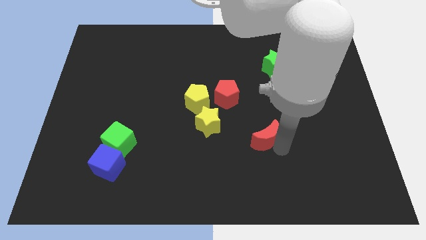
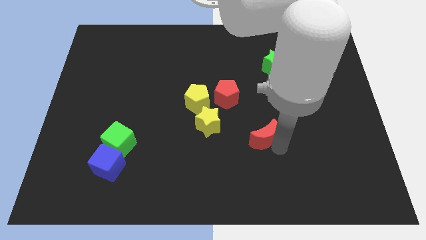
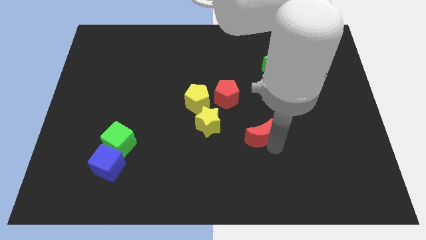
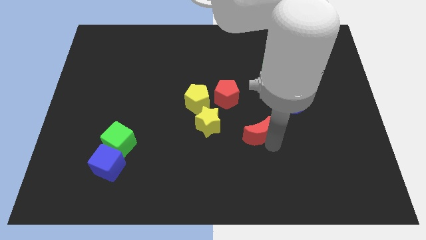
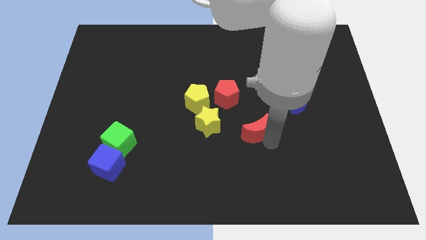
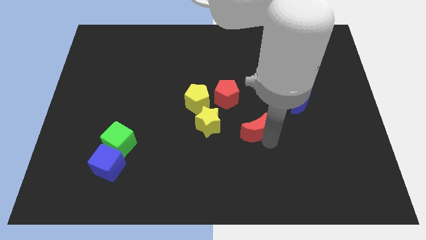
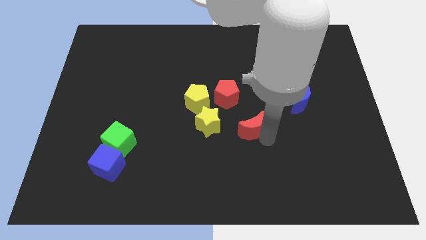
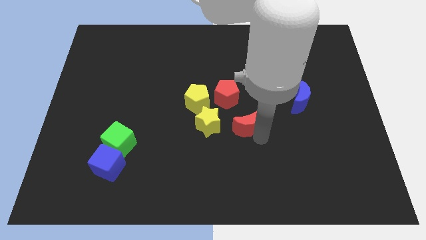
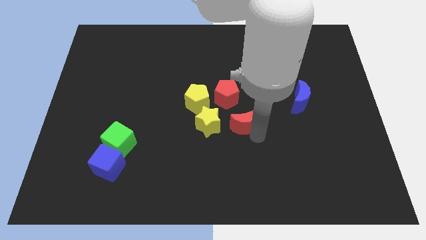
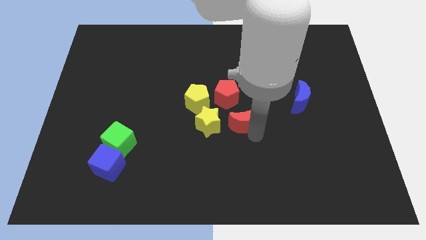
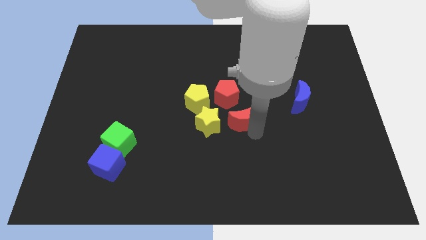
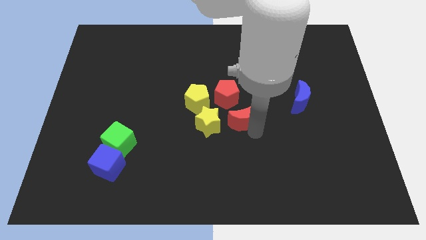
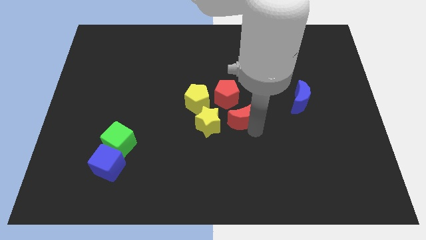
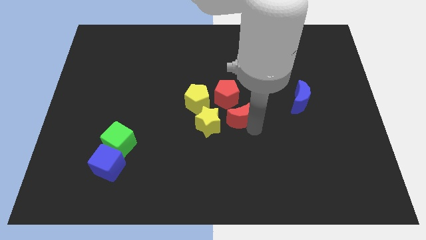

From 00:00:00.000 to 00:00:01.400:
place red moon to the right of yellow star

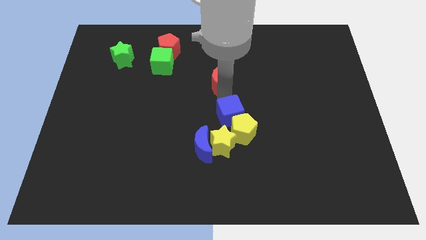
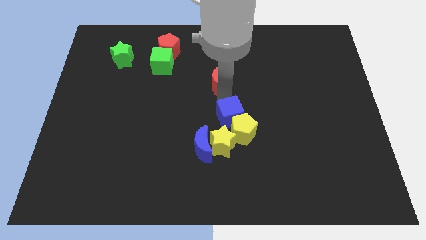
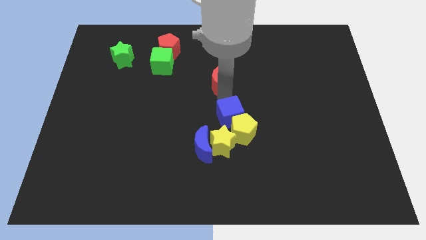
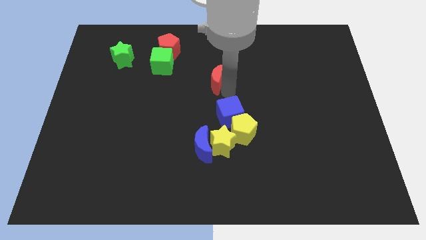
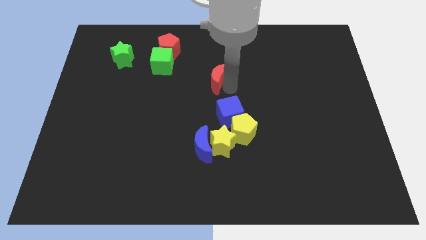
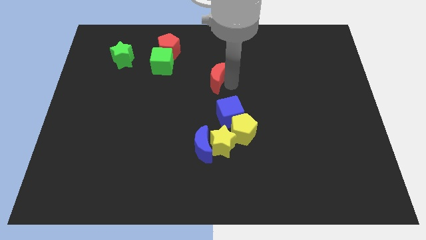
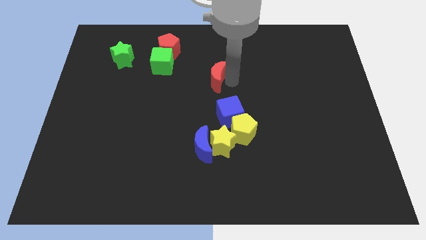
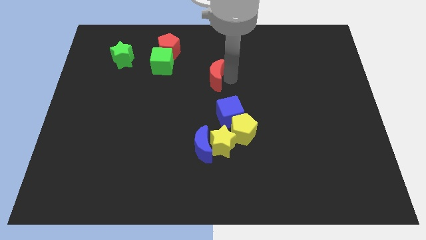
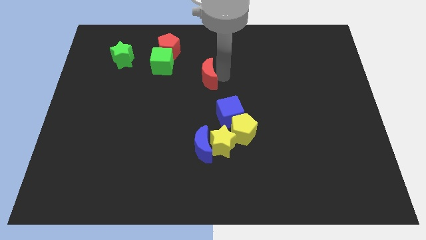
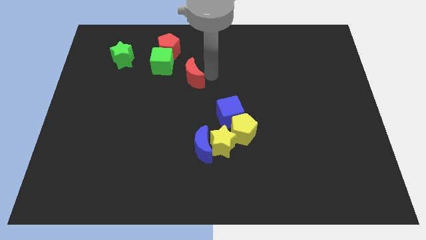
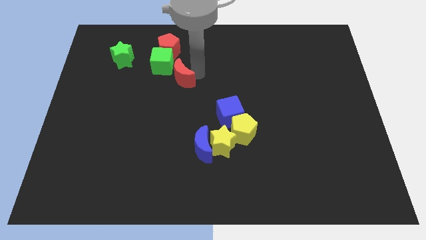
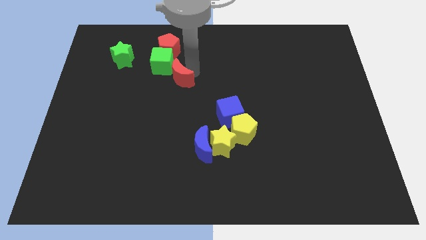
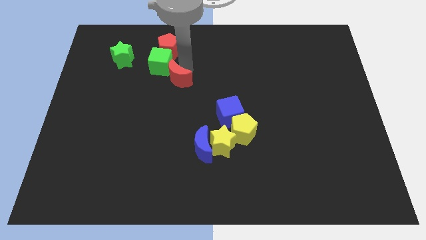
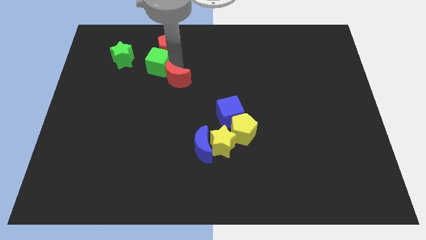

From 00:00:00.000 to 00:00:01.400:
place the red moon bottom right to the green cube

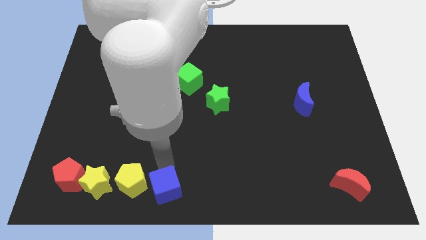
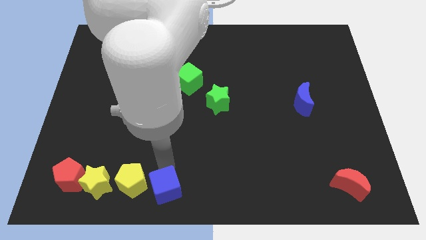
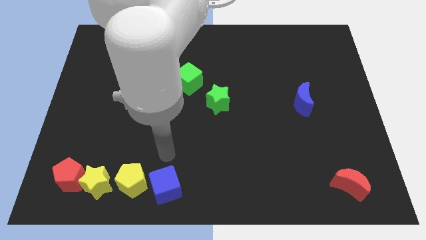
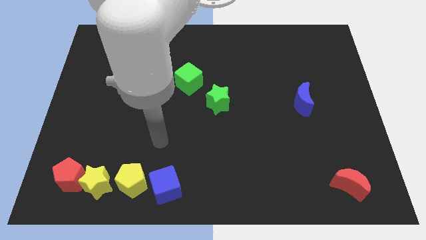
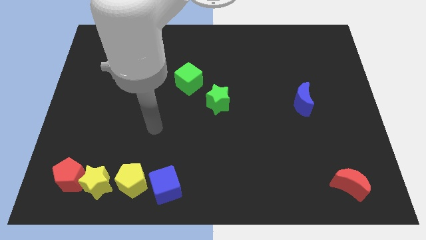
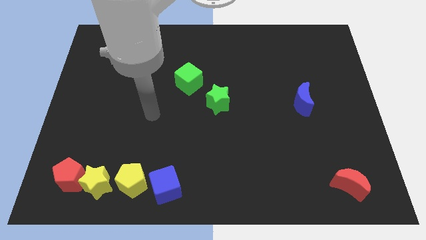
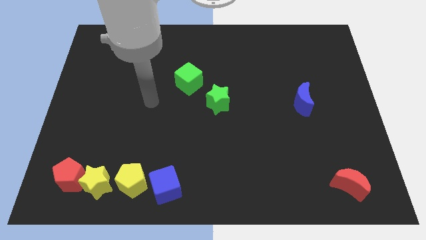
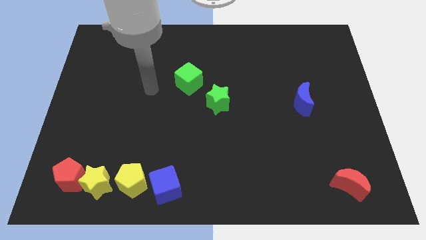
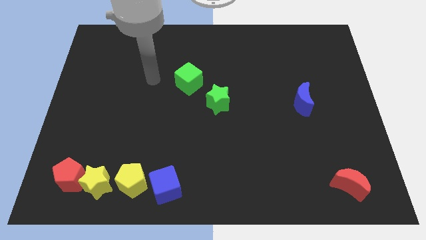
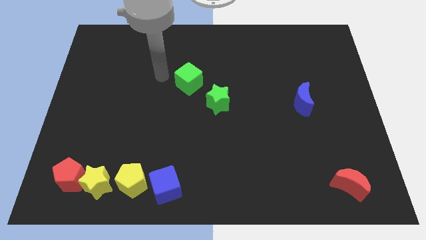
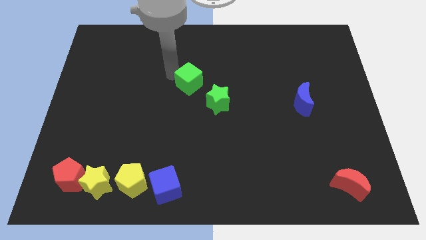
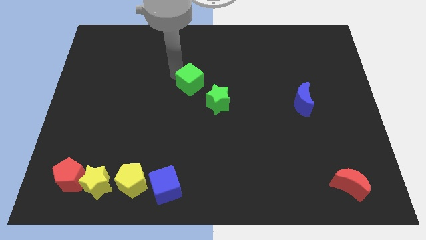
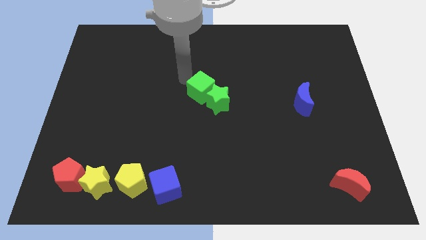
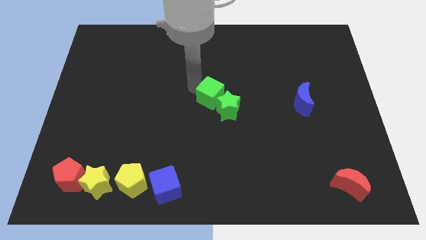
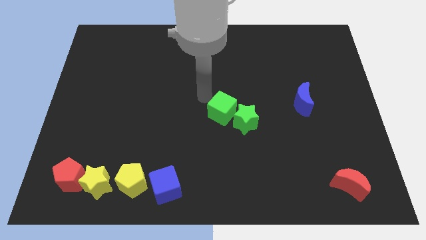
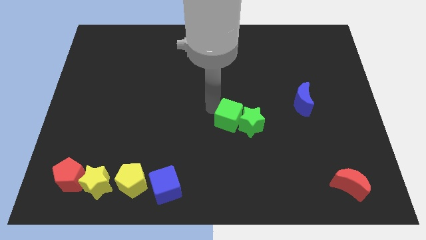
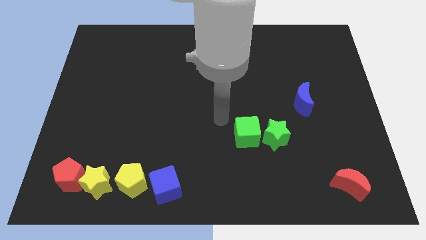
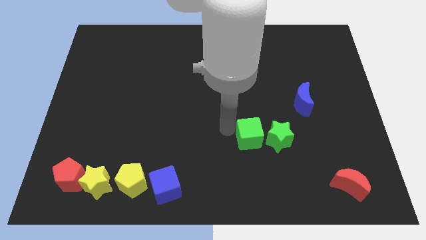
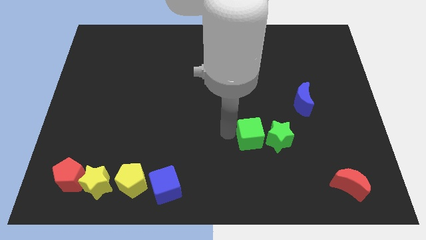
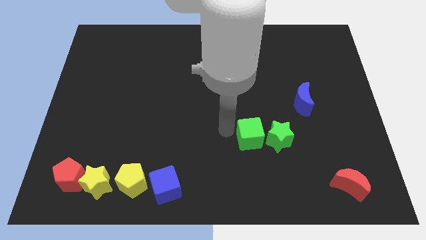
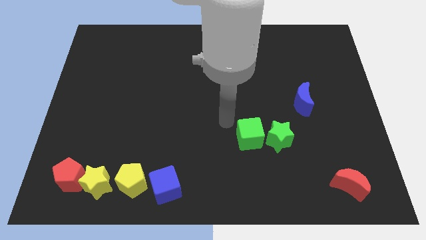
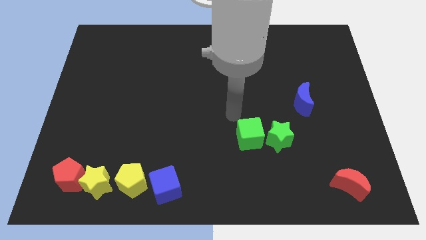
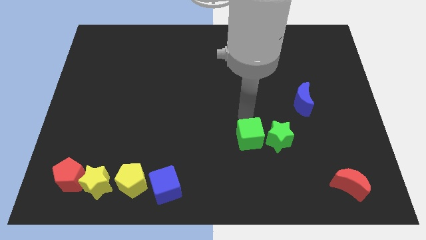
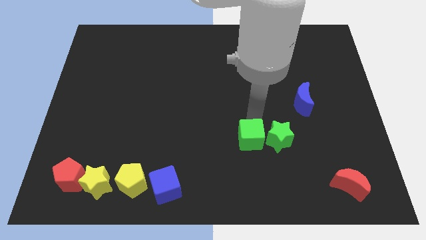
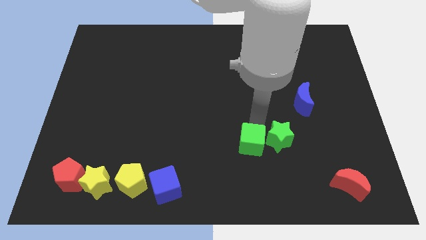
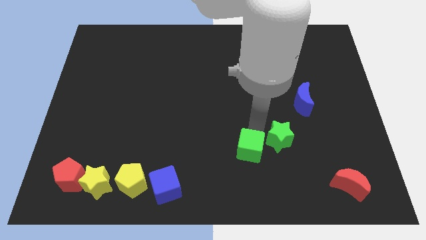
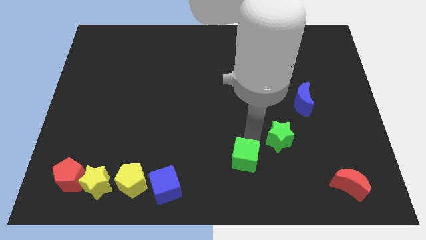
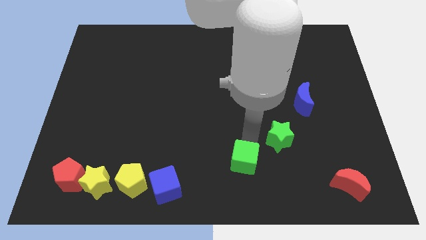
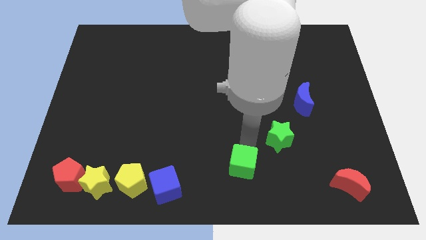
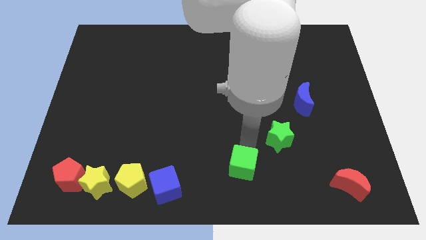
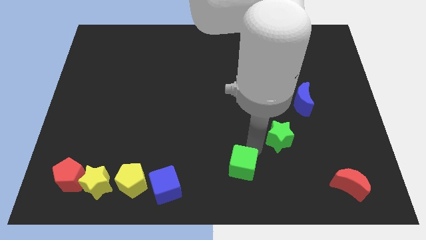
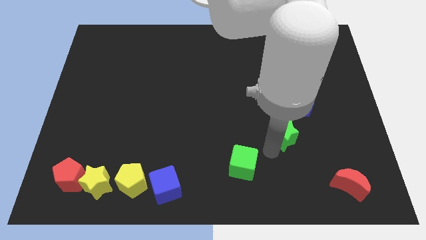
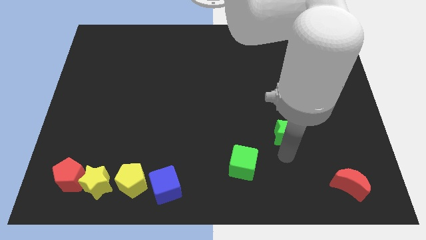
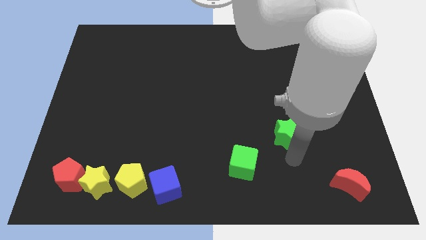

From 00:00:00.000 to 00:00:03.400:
move the green blocks to the right side of the table

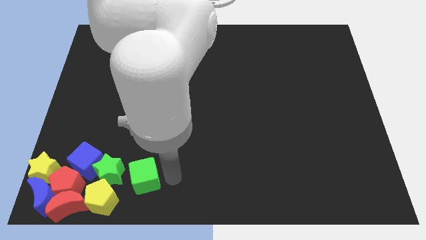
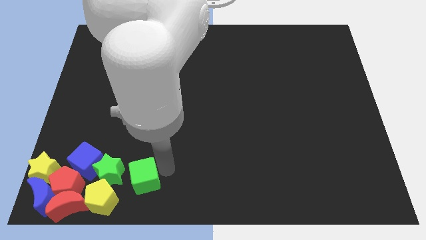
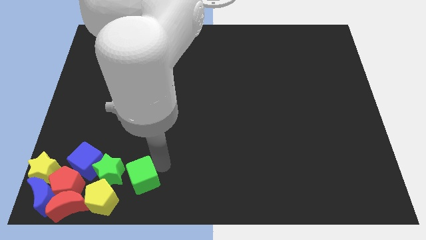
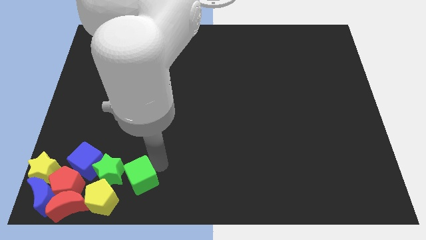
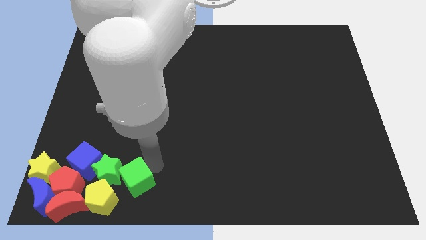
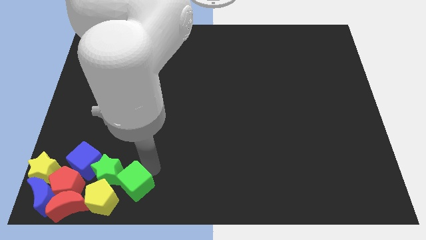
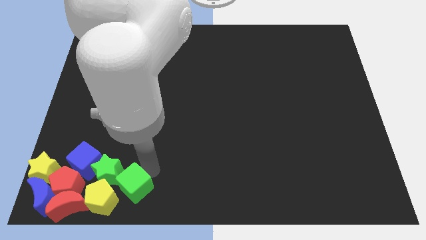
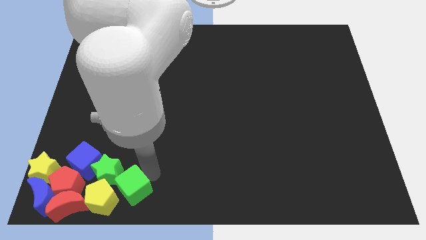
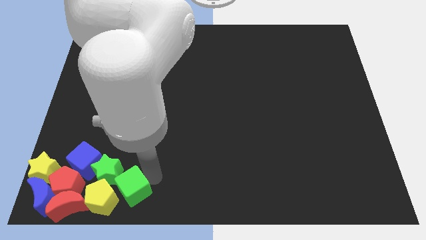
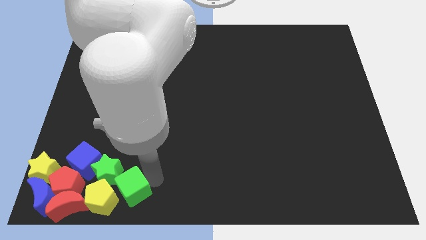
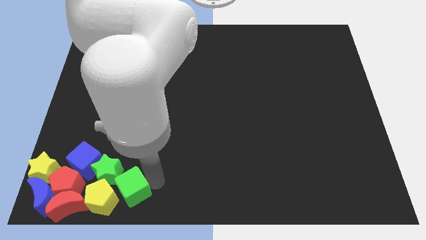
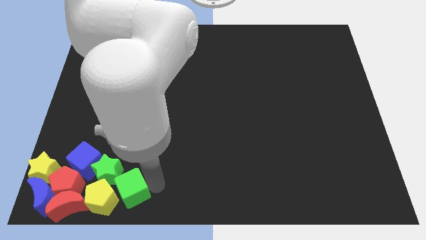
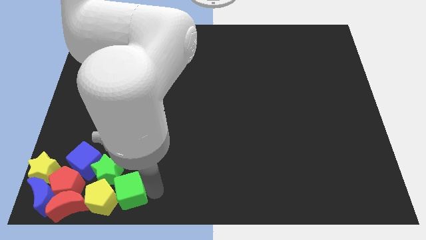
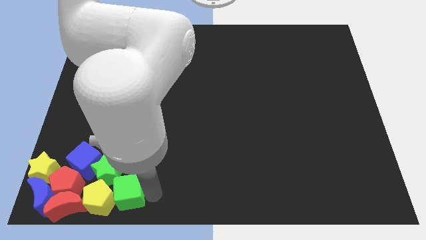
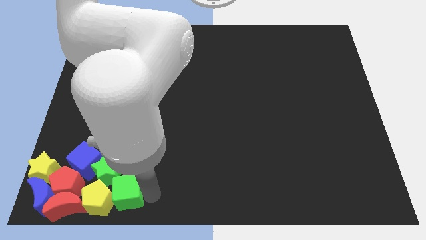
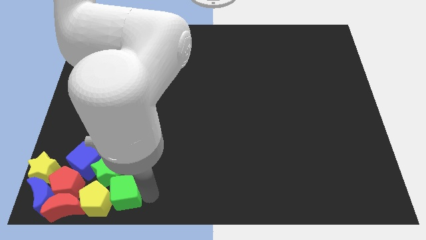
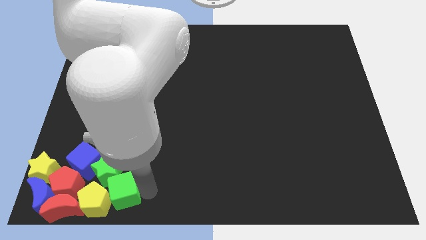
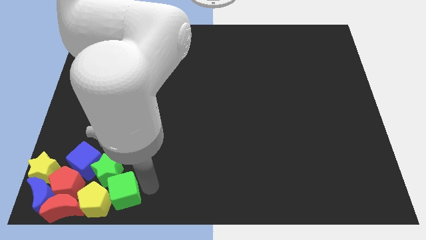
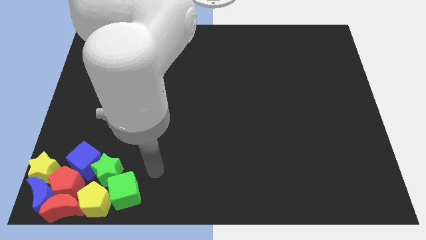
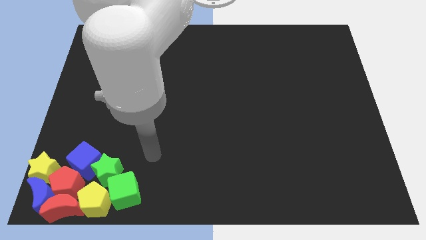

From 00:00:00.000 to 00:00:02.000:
push the green cube into the yellow pentagon

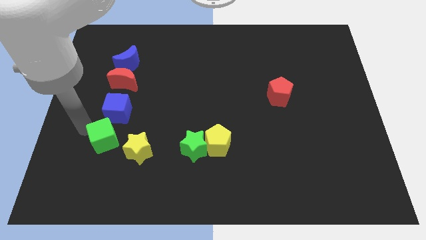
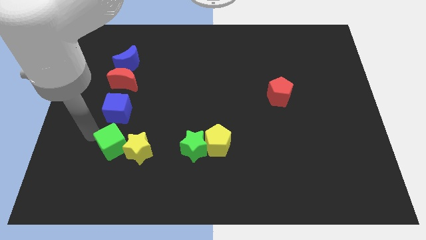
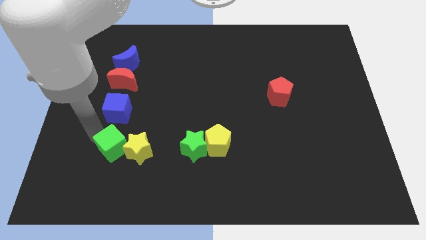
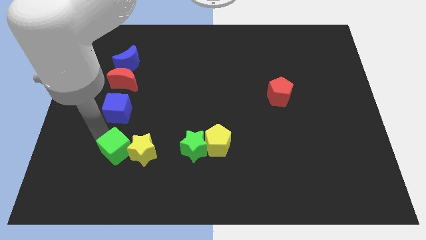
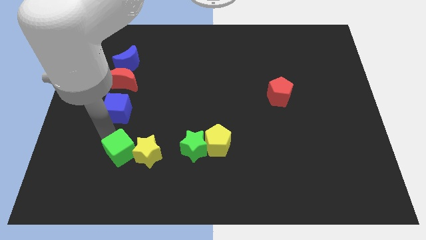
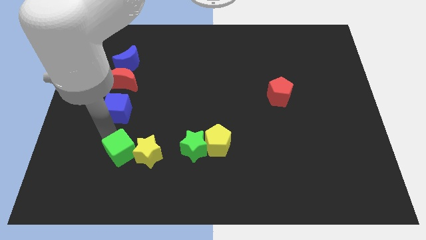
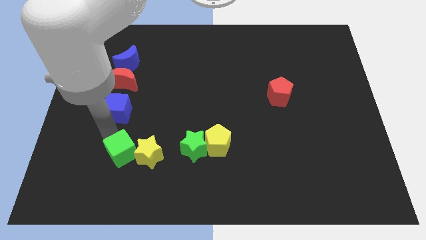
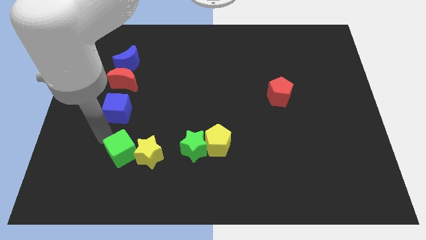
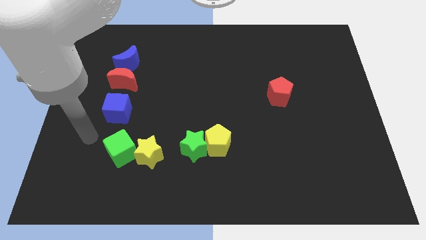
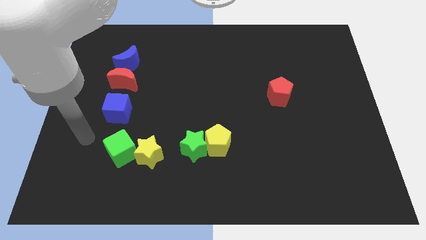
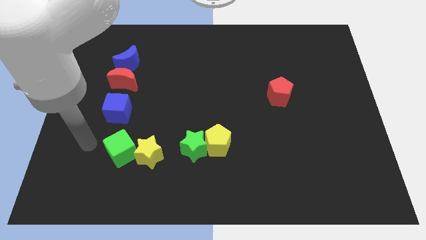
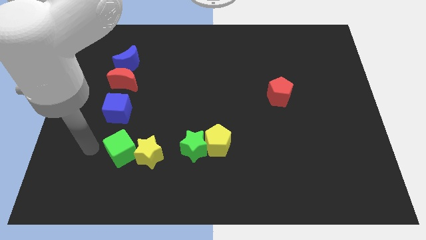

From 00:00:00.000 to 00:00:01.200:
push green cube towards the yellow star
